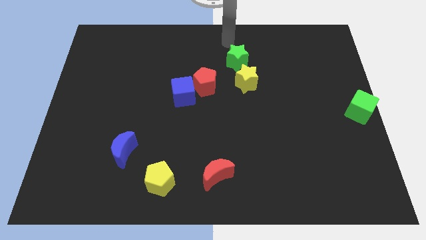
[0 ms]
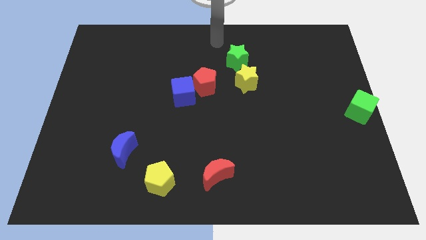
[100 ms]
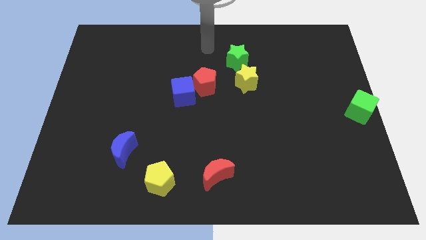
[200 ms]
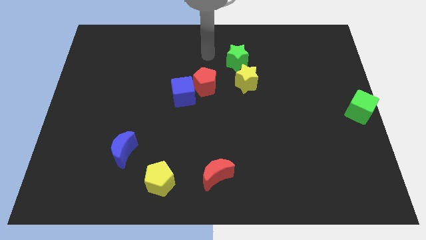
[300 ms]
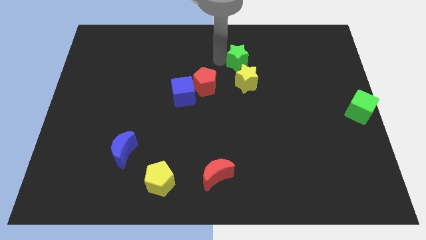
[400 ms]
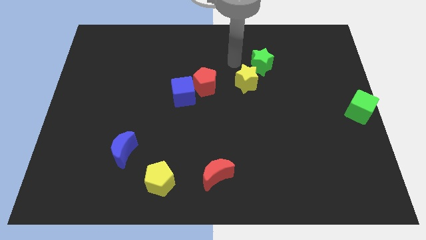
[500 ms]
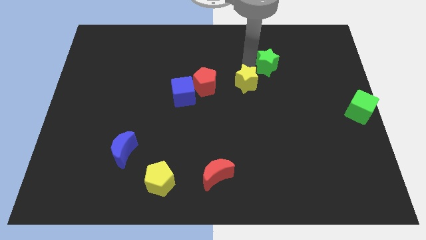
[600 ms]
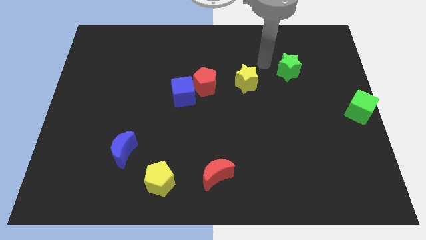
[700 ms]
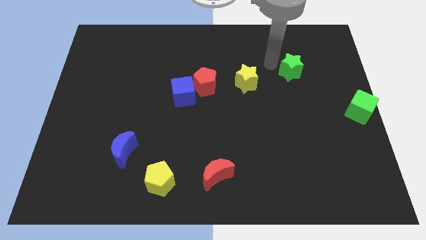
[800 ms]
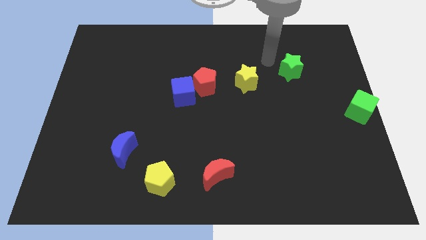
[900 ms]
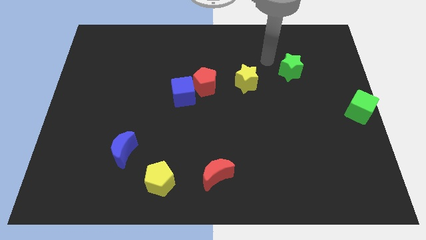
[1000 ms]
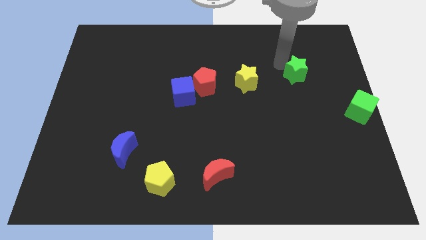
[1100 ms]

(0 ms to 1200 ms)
push the green star towards green cube

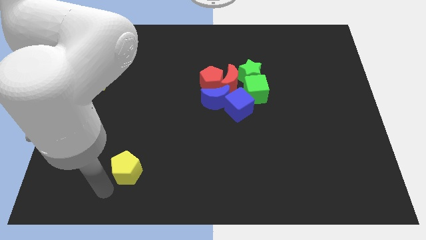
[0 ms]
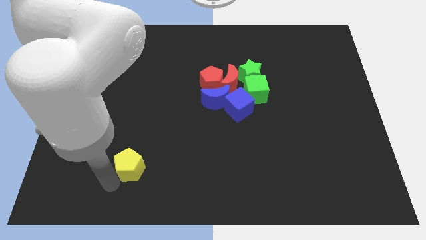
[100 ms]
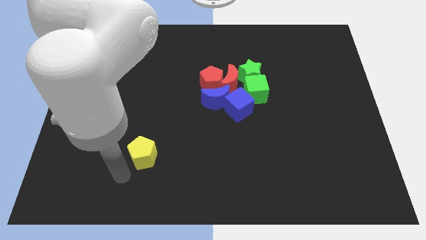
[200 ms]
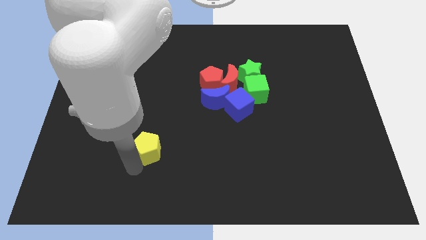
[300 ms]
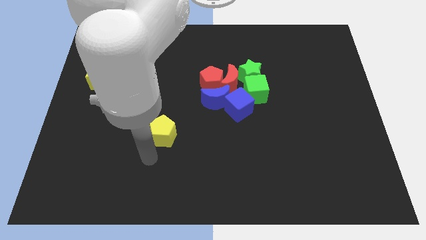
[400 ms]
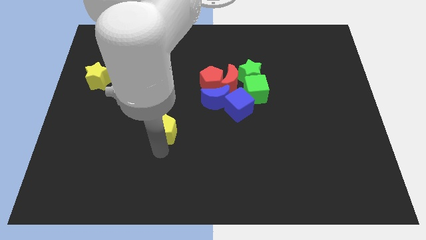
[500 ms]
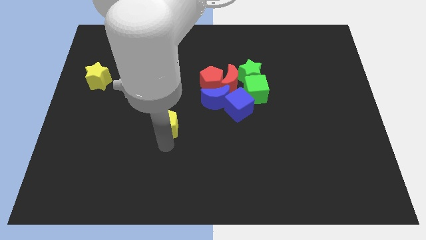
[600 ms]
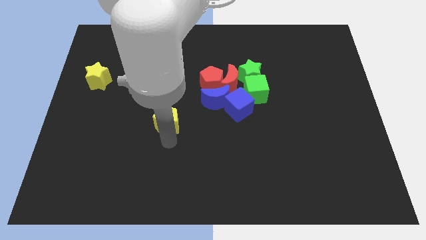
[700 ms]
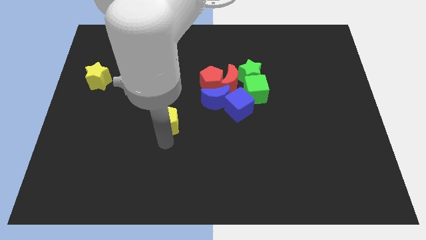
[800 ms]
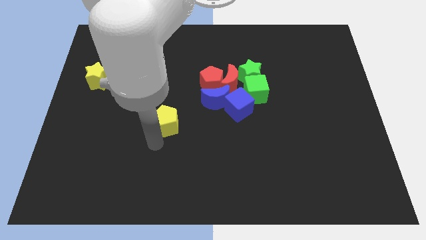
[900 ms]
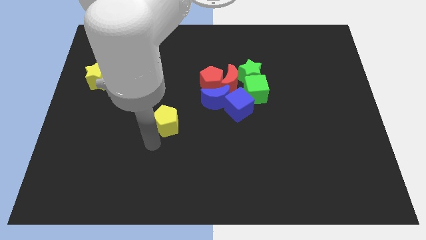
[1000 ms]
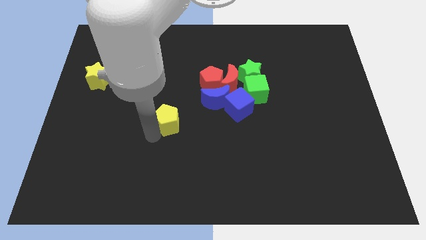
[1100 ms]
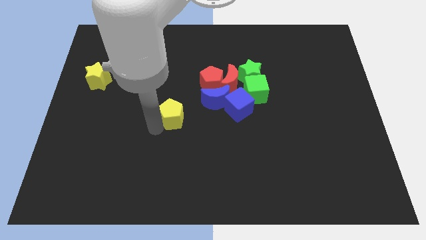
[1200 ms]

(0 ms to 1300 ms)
move the yellow pentagon to the center

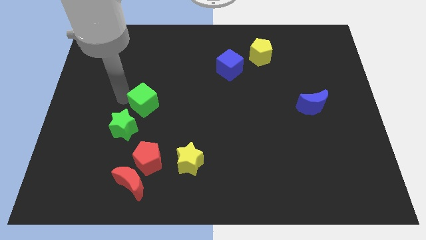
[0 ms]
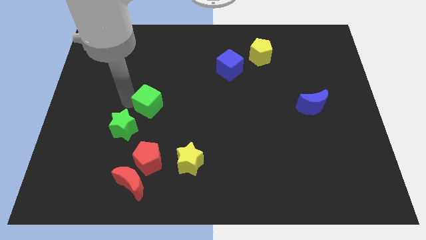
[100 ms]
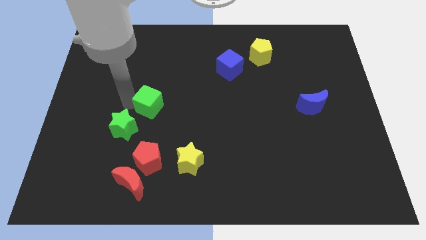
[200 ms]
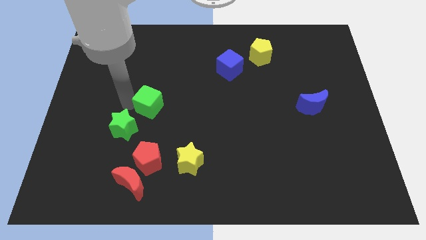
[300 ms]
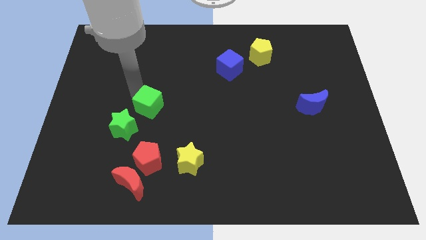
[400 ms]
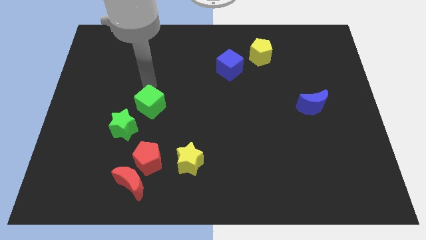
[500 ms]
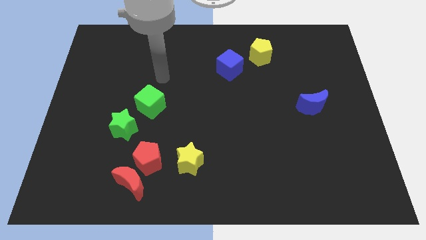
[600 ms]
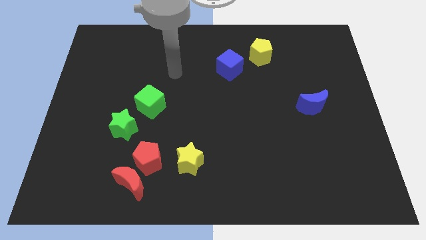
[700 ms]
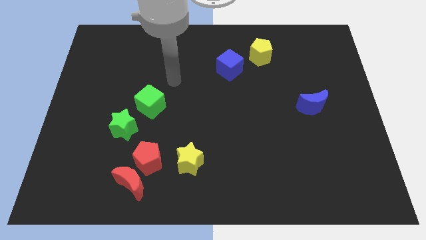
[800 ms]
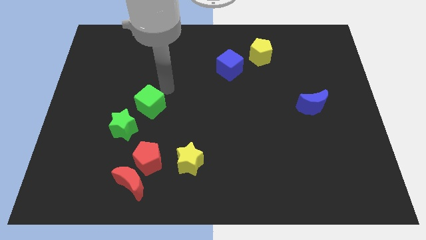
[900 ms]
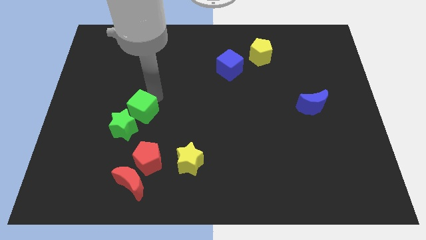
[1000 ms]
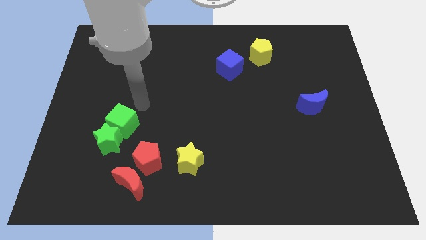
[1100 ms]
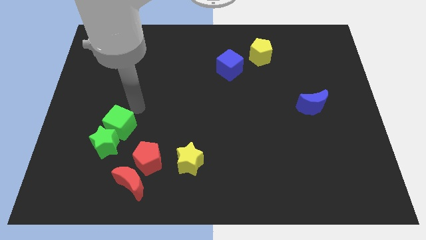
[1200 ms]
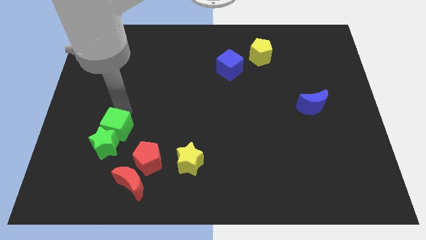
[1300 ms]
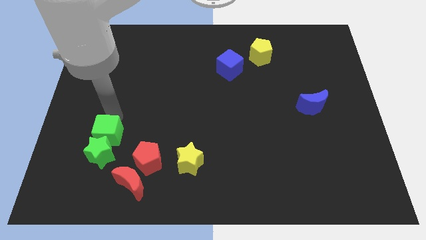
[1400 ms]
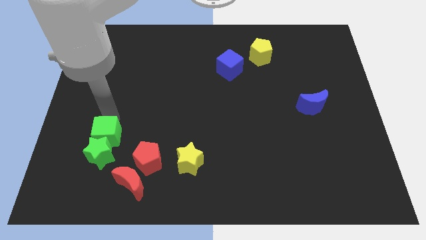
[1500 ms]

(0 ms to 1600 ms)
push green cube into the top of the green star

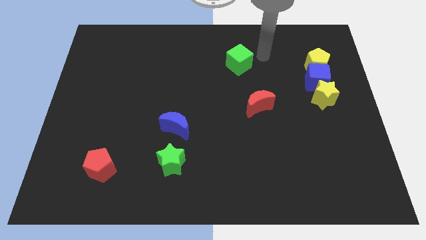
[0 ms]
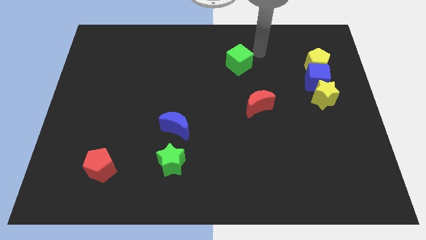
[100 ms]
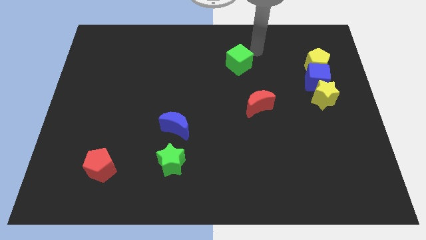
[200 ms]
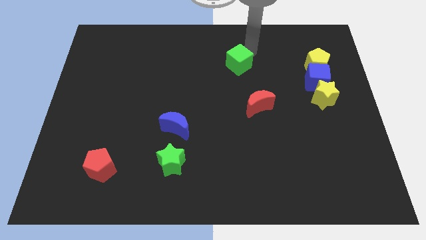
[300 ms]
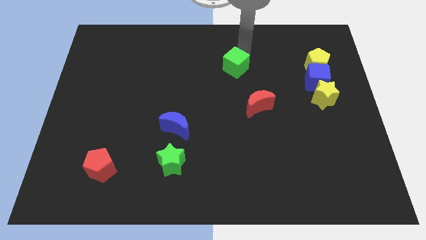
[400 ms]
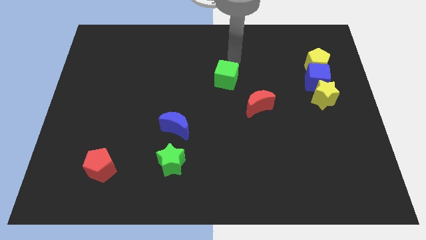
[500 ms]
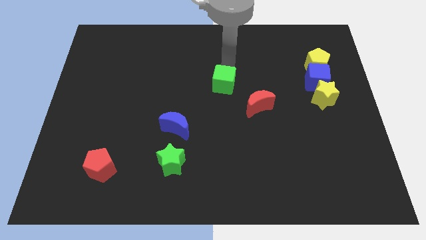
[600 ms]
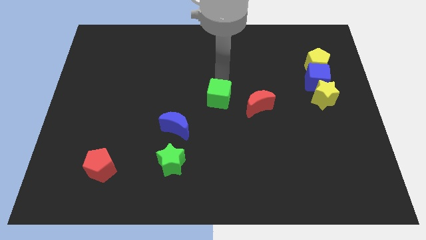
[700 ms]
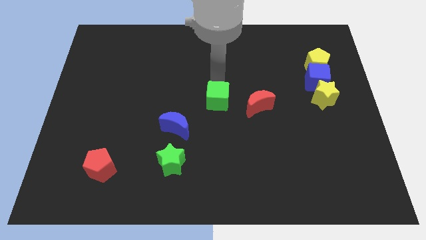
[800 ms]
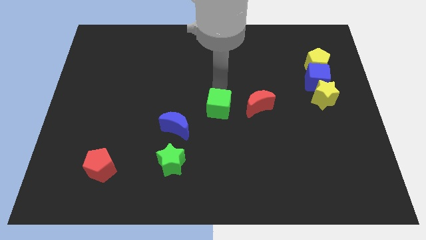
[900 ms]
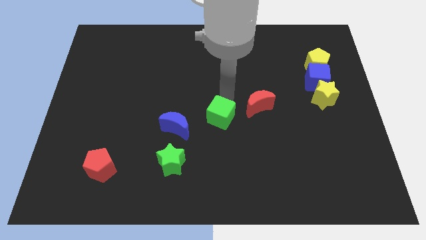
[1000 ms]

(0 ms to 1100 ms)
push the green cube in between blue and red crescents

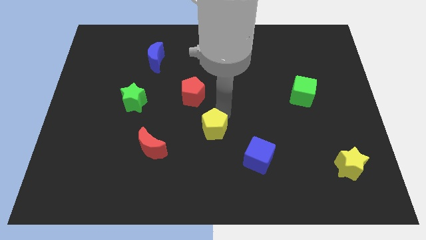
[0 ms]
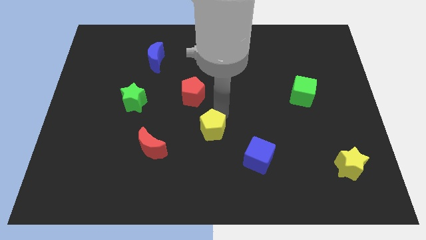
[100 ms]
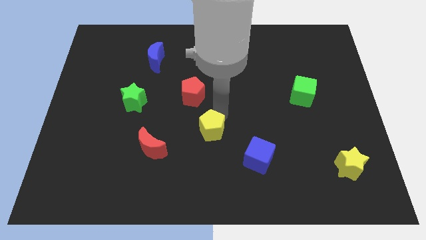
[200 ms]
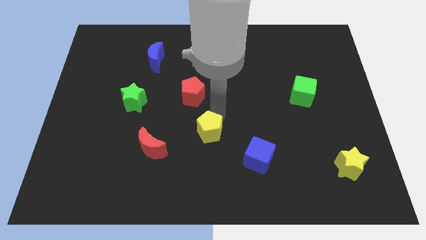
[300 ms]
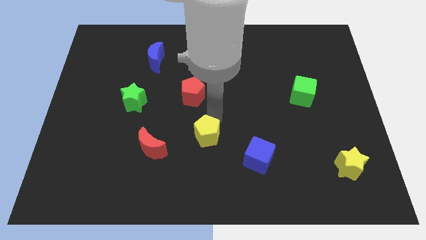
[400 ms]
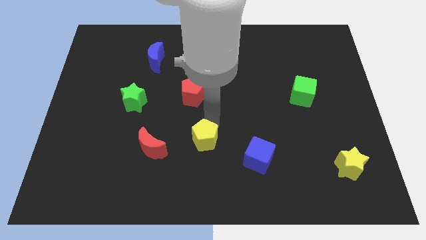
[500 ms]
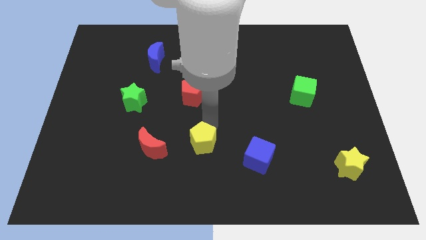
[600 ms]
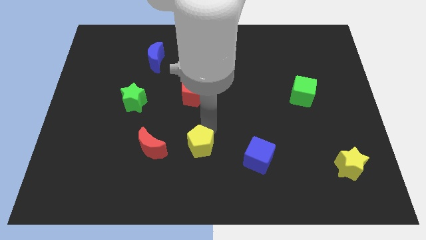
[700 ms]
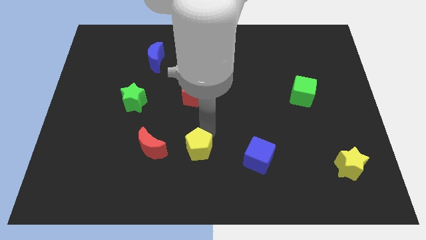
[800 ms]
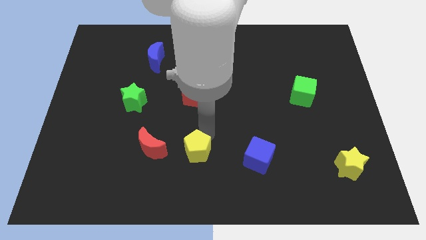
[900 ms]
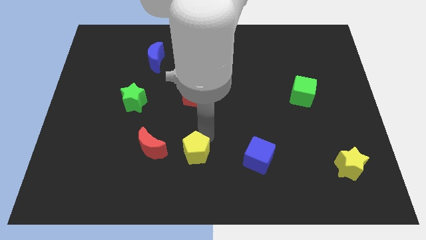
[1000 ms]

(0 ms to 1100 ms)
place yellow pentagon in between red moon and blue cube

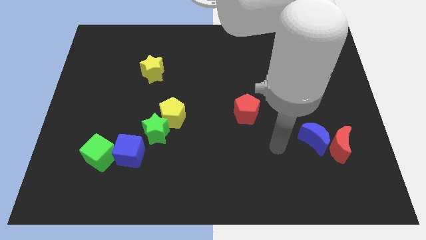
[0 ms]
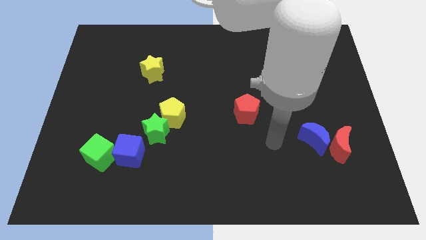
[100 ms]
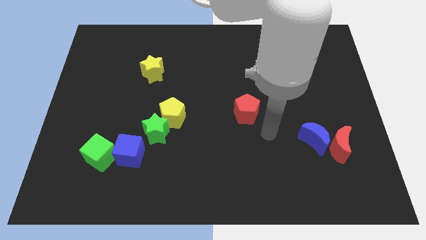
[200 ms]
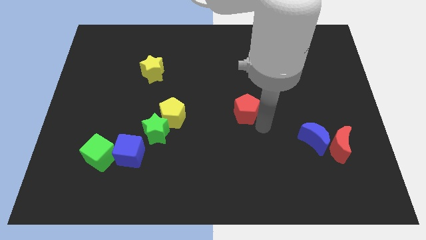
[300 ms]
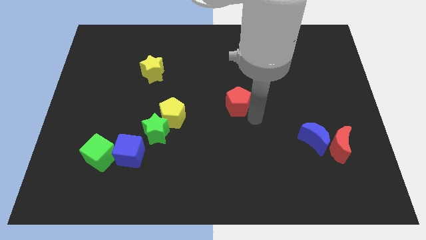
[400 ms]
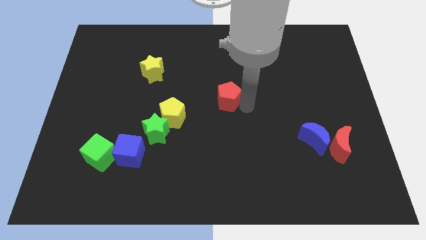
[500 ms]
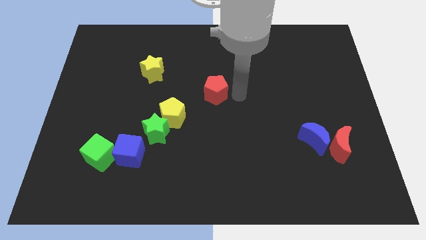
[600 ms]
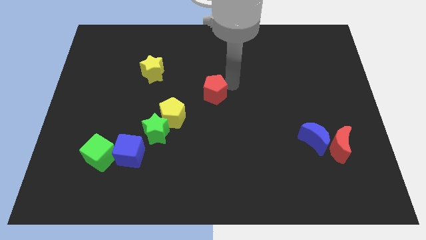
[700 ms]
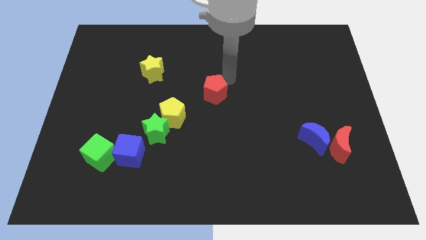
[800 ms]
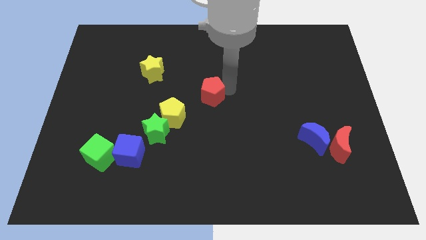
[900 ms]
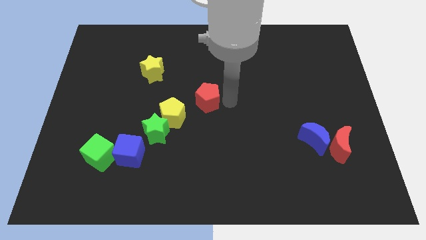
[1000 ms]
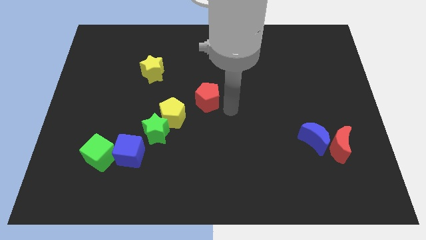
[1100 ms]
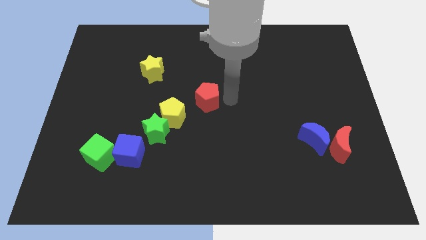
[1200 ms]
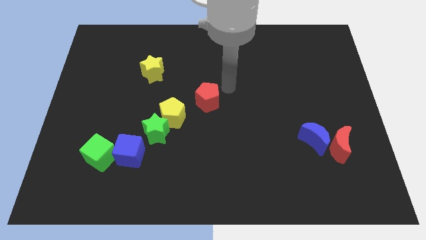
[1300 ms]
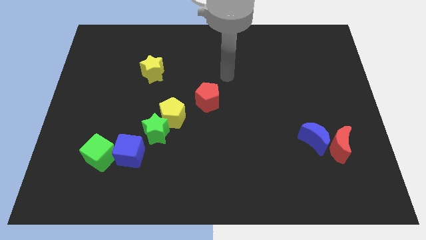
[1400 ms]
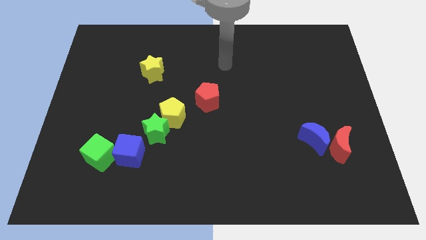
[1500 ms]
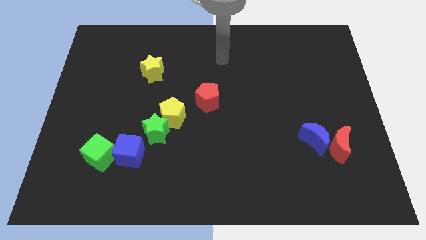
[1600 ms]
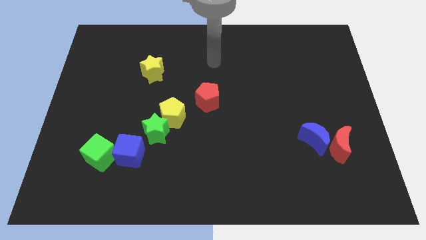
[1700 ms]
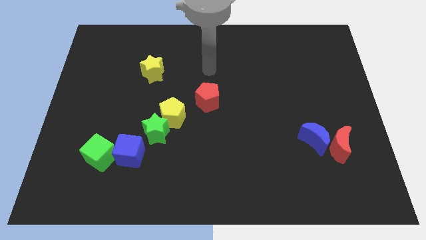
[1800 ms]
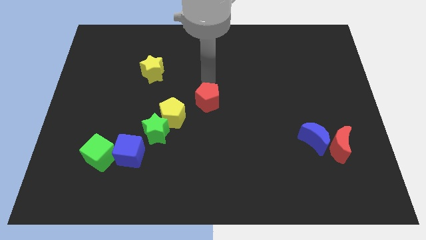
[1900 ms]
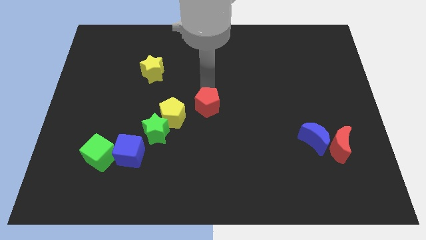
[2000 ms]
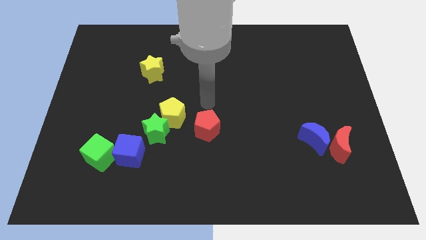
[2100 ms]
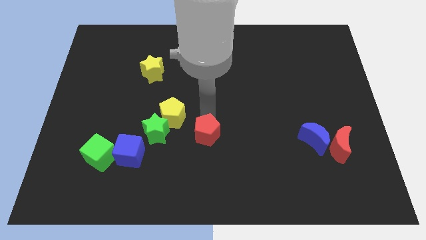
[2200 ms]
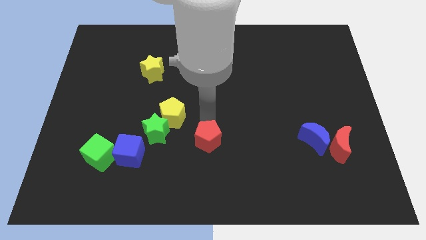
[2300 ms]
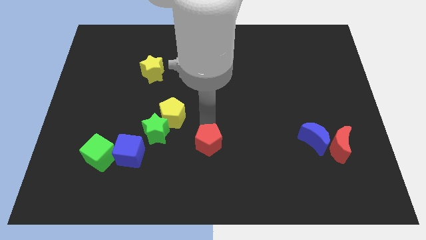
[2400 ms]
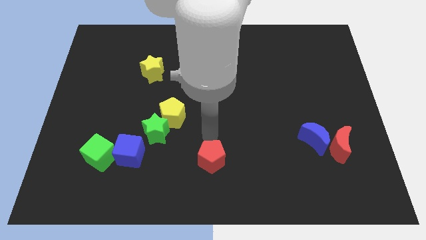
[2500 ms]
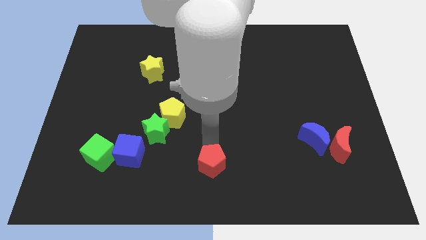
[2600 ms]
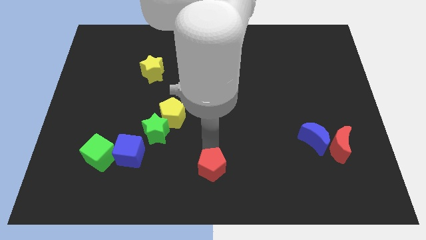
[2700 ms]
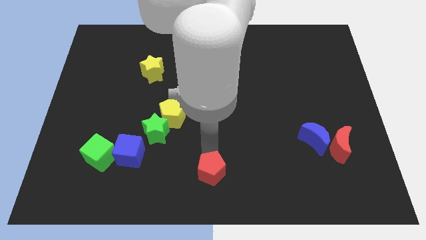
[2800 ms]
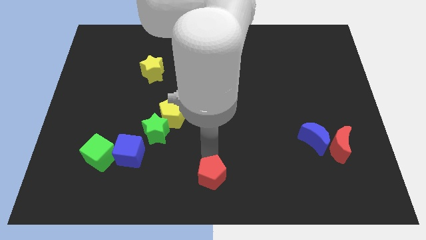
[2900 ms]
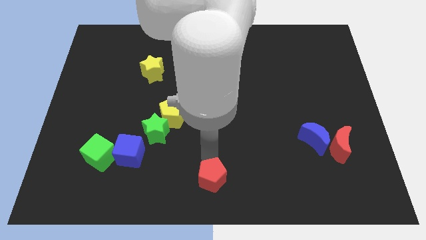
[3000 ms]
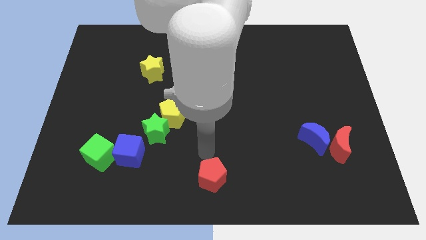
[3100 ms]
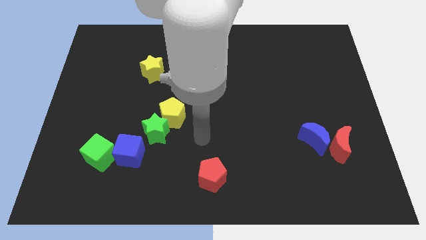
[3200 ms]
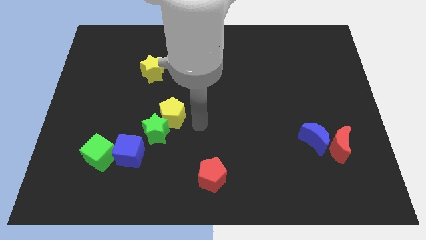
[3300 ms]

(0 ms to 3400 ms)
push the red pentagon towards the bottom center of the board
